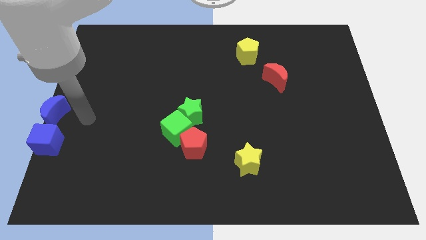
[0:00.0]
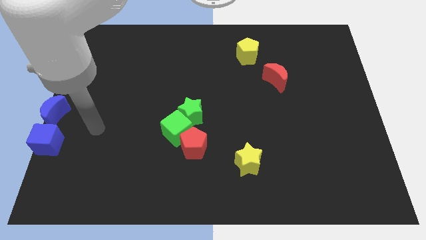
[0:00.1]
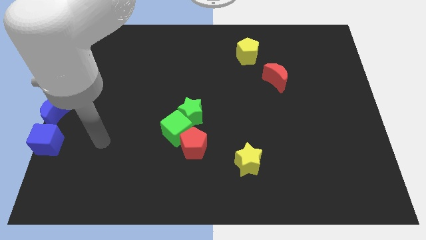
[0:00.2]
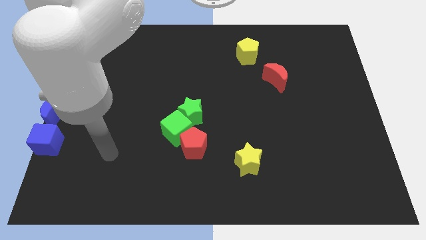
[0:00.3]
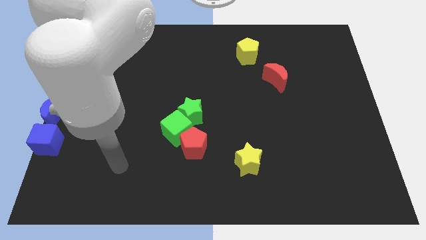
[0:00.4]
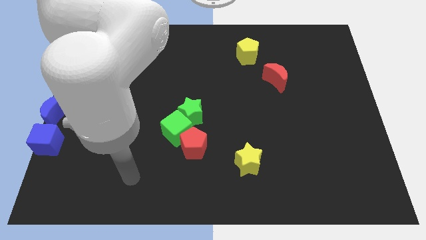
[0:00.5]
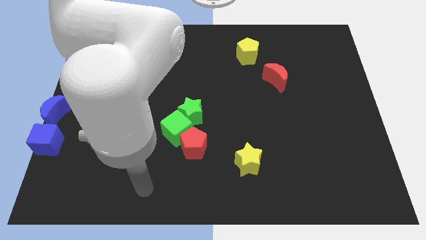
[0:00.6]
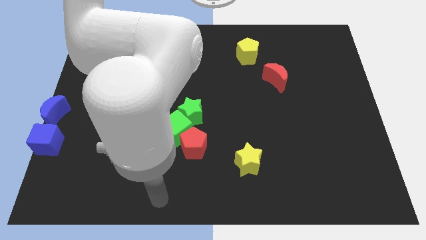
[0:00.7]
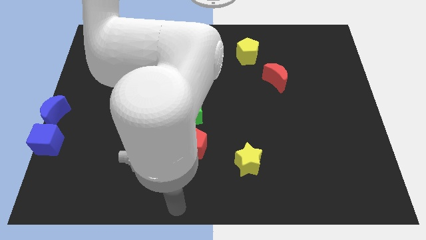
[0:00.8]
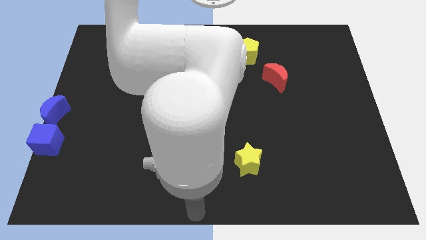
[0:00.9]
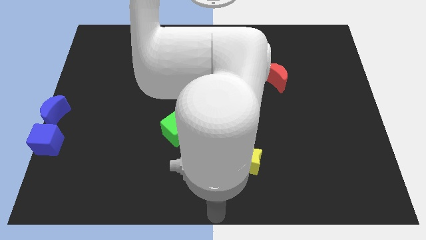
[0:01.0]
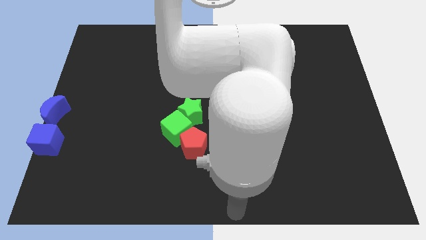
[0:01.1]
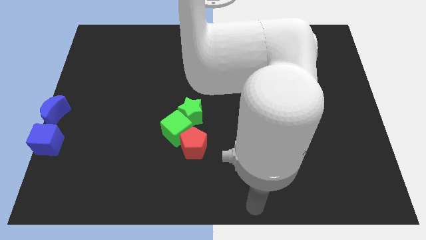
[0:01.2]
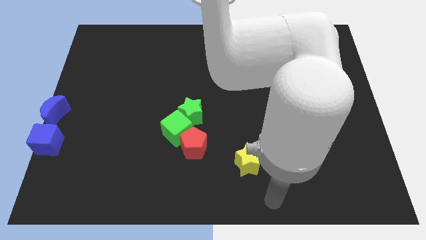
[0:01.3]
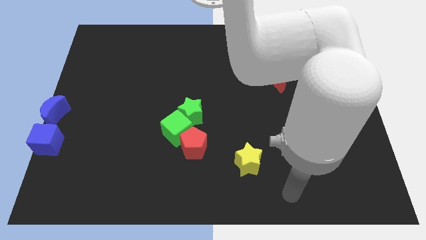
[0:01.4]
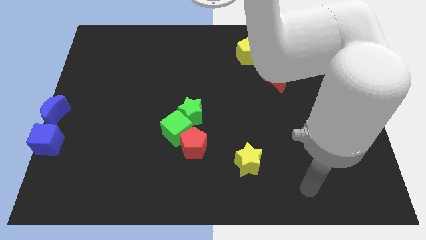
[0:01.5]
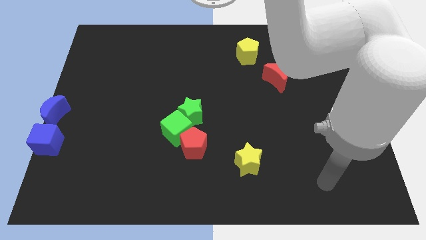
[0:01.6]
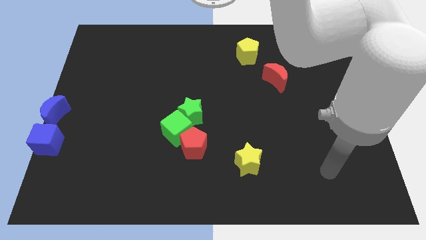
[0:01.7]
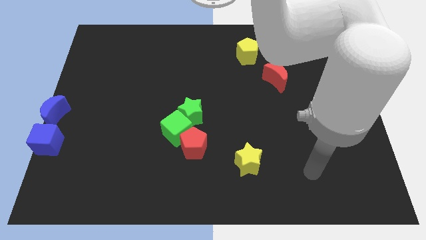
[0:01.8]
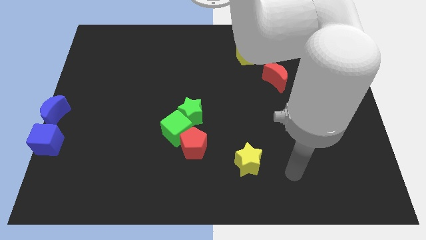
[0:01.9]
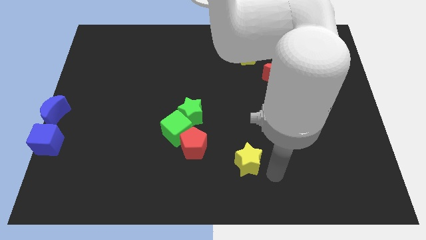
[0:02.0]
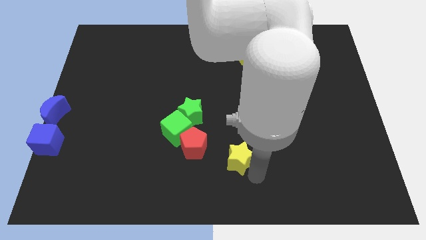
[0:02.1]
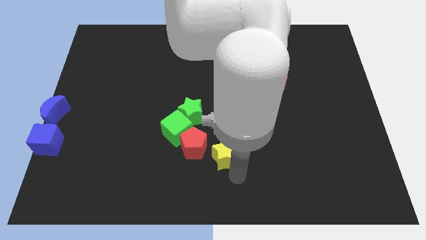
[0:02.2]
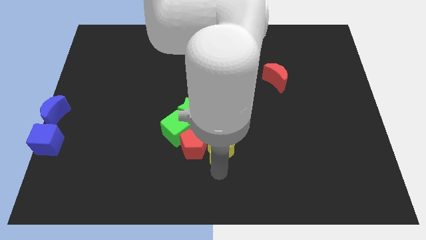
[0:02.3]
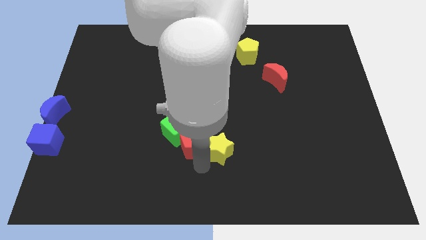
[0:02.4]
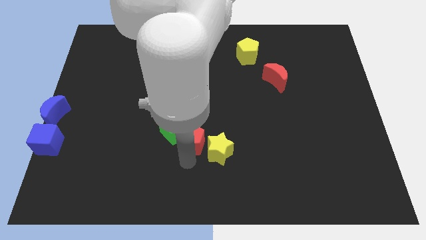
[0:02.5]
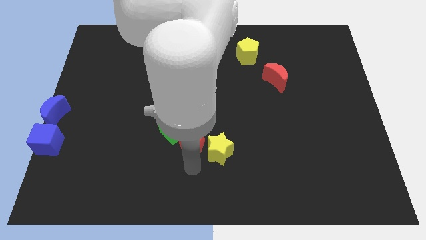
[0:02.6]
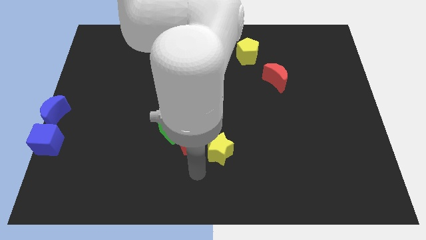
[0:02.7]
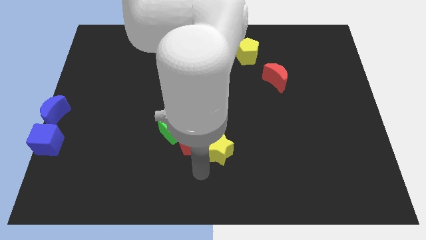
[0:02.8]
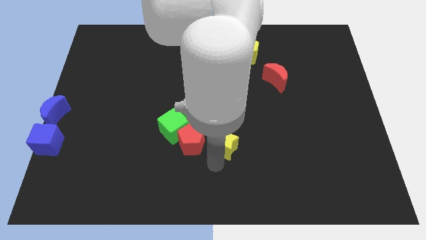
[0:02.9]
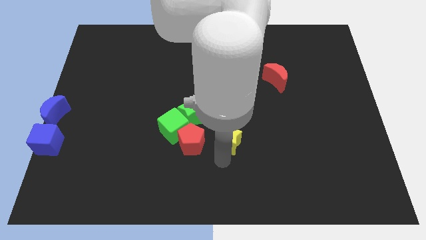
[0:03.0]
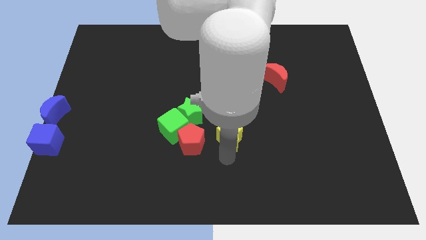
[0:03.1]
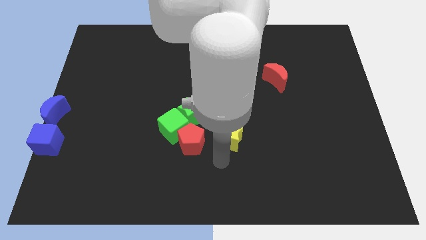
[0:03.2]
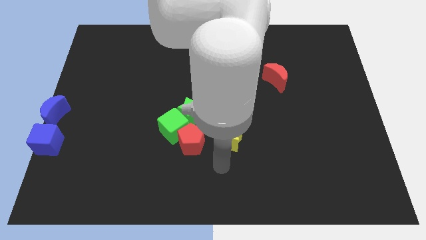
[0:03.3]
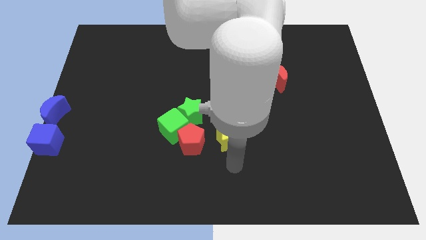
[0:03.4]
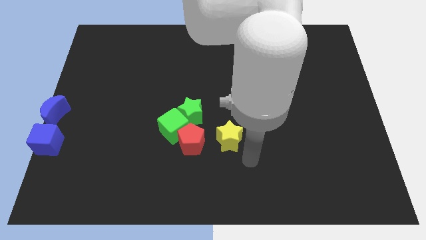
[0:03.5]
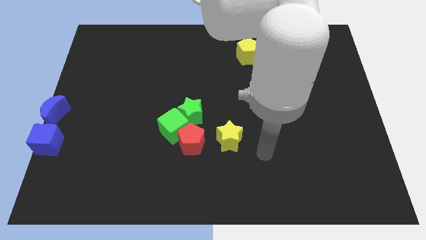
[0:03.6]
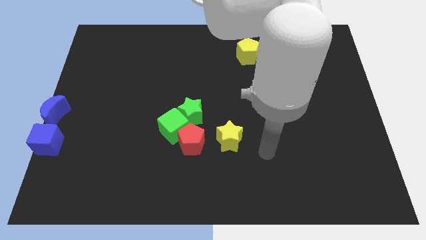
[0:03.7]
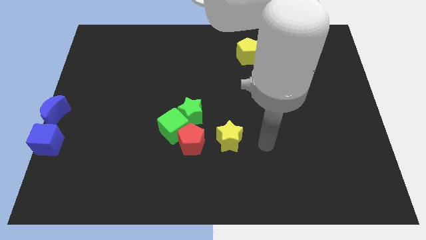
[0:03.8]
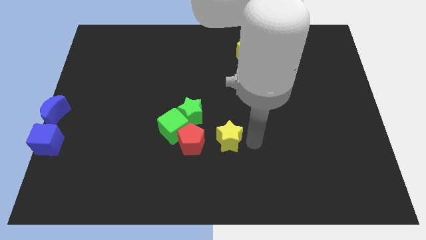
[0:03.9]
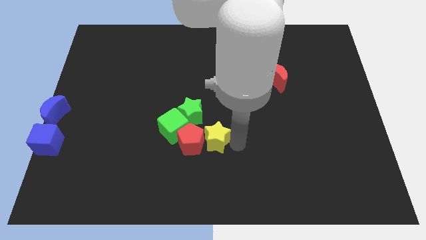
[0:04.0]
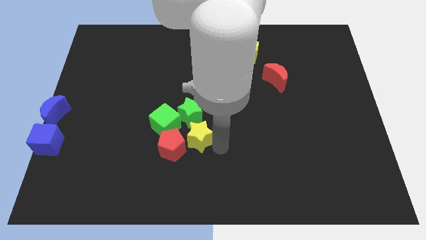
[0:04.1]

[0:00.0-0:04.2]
push the yellow star into the red pentagon

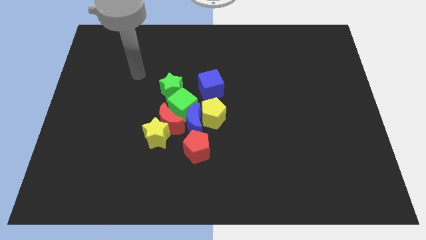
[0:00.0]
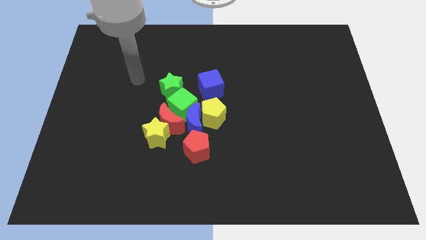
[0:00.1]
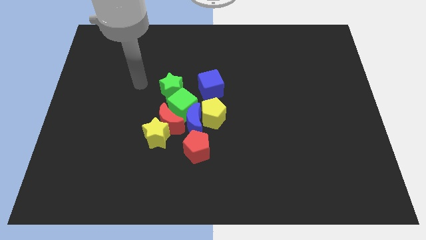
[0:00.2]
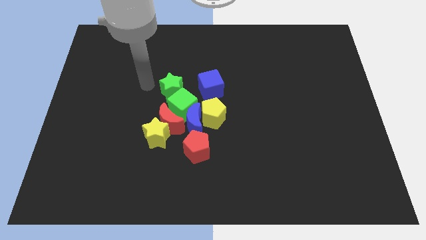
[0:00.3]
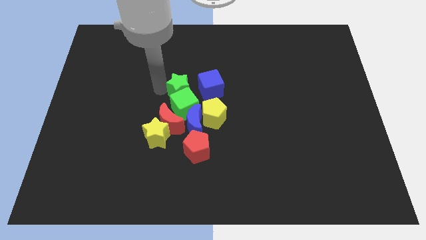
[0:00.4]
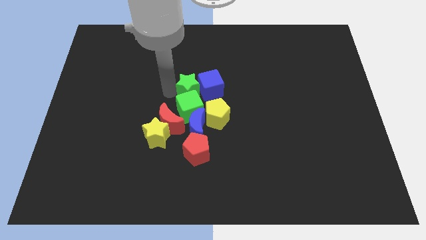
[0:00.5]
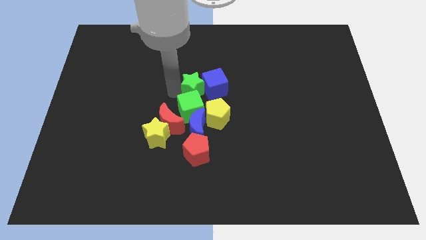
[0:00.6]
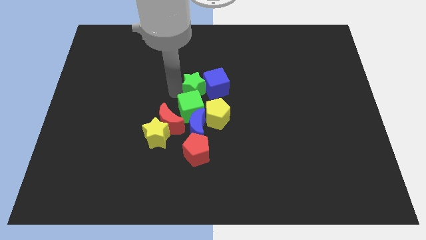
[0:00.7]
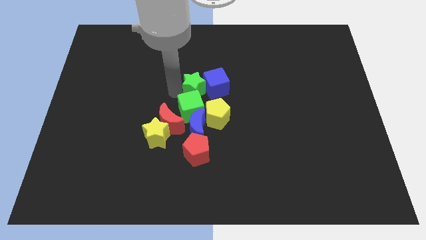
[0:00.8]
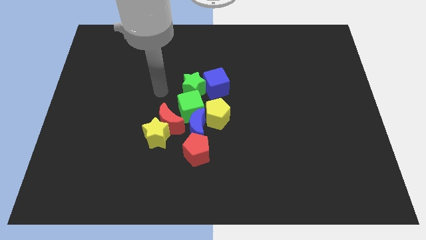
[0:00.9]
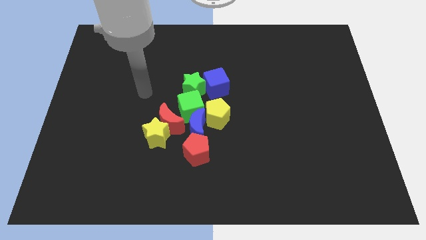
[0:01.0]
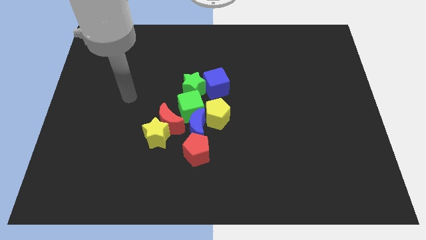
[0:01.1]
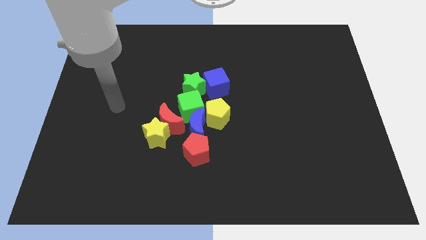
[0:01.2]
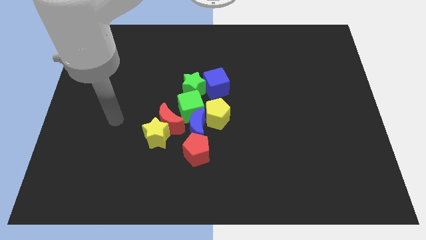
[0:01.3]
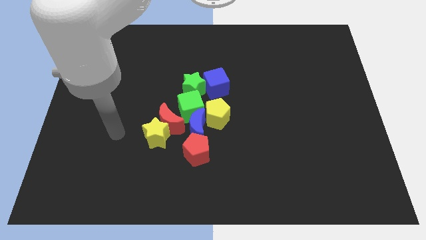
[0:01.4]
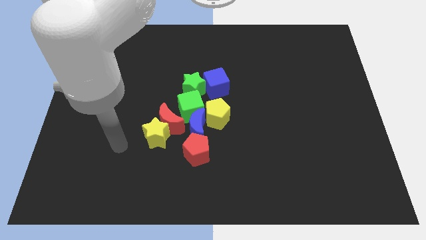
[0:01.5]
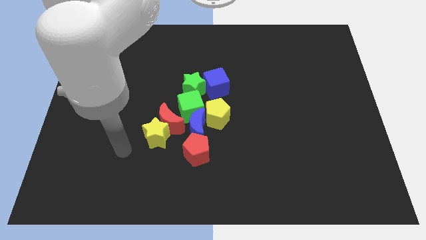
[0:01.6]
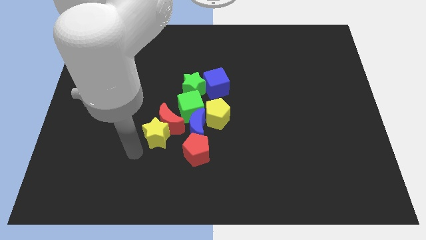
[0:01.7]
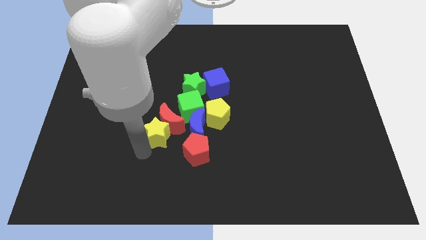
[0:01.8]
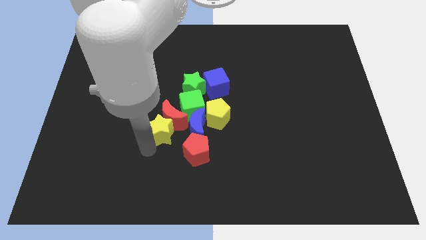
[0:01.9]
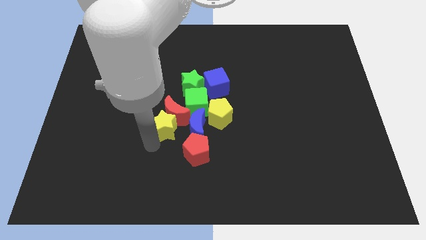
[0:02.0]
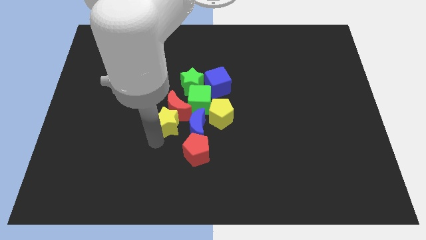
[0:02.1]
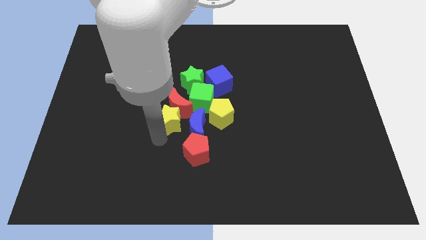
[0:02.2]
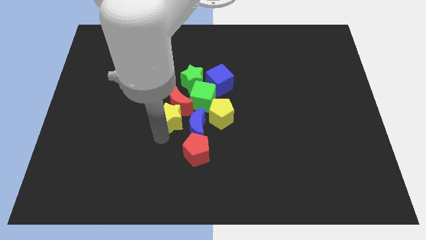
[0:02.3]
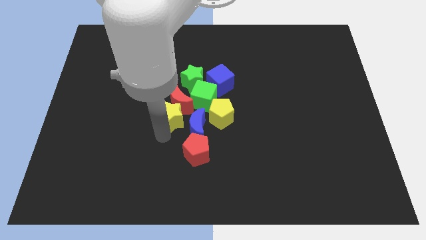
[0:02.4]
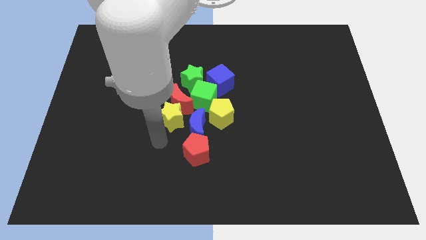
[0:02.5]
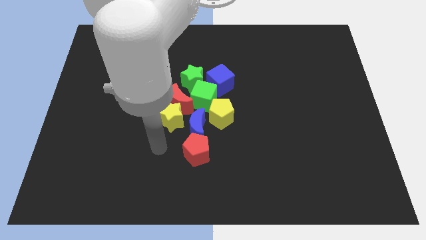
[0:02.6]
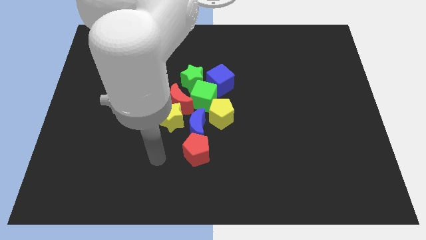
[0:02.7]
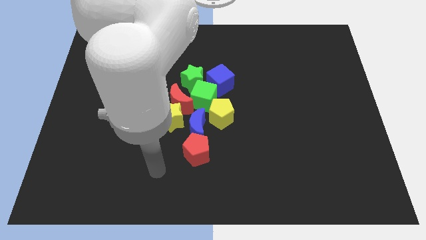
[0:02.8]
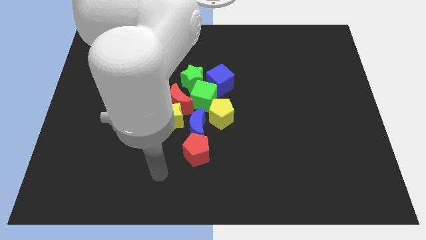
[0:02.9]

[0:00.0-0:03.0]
slightly push the red moon with the yellow star diagonally up

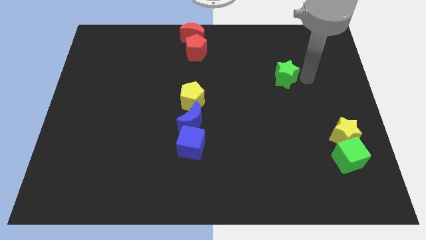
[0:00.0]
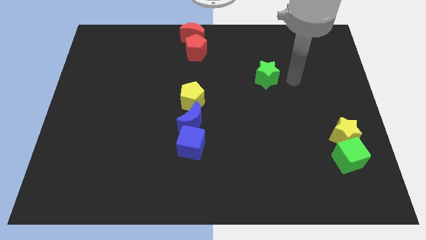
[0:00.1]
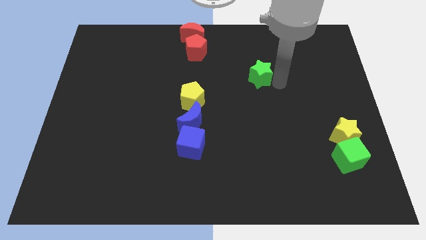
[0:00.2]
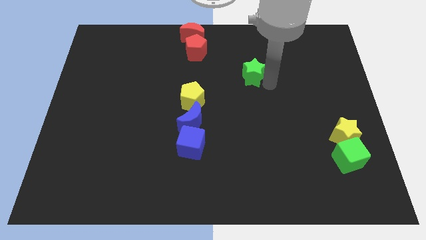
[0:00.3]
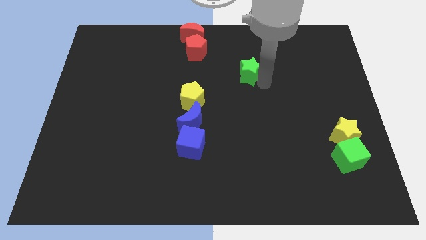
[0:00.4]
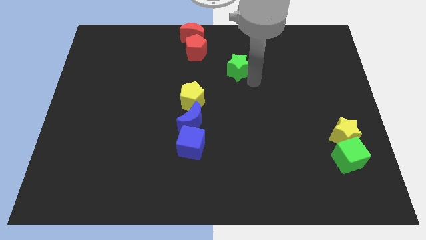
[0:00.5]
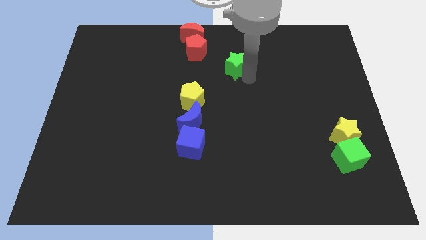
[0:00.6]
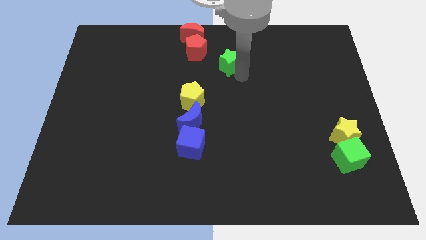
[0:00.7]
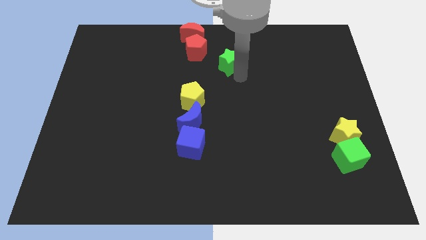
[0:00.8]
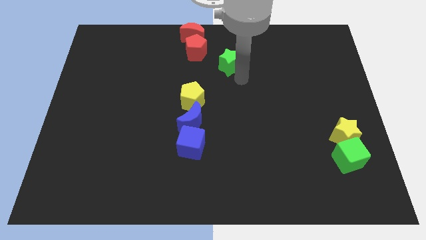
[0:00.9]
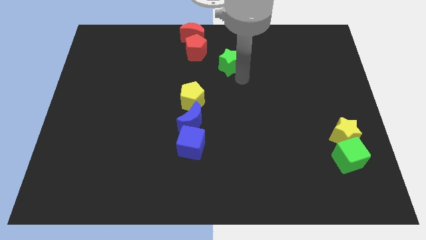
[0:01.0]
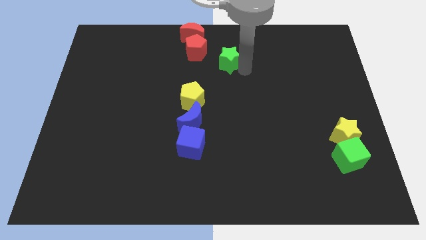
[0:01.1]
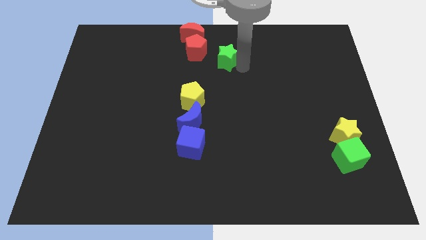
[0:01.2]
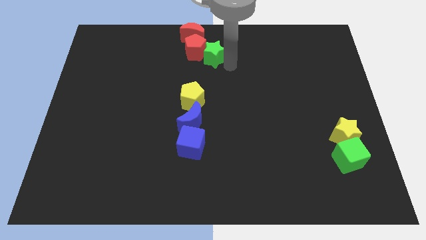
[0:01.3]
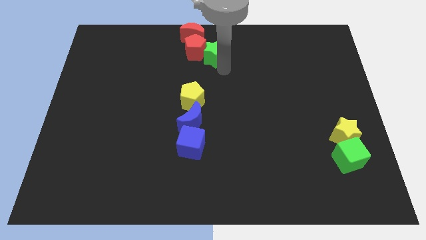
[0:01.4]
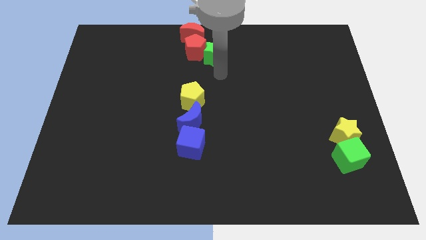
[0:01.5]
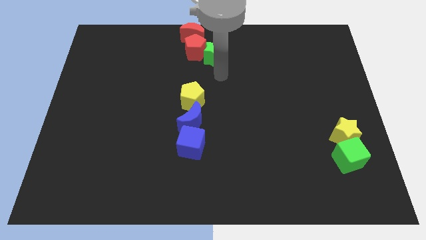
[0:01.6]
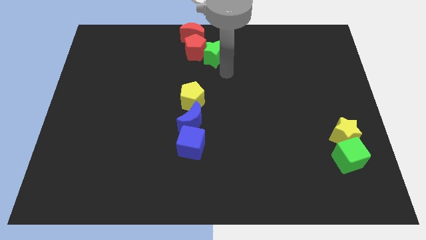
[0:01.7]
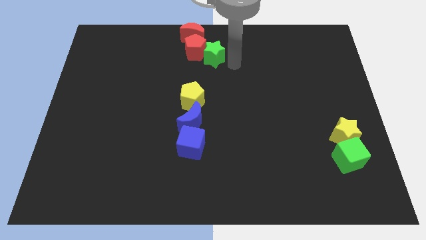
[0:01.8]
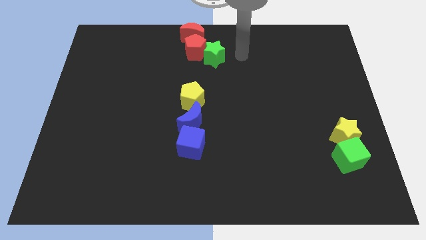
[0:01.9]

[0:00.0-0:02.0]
push the green star into the red pentagon
